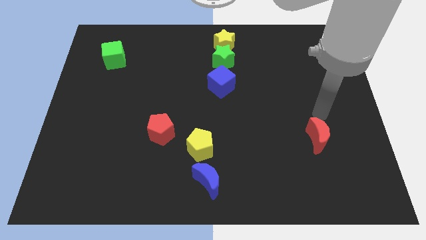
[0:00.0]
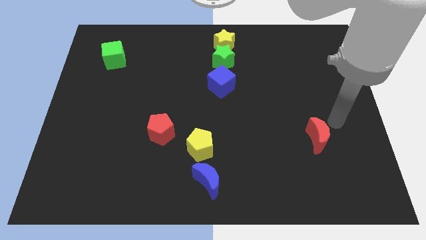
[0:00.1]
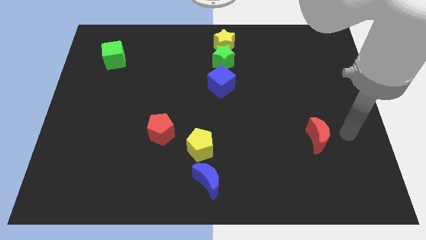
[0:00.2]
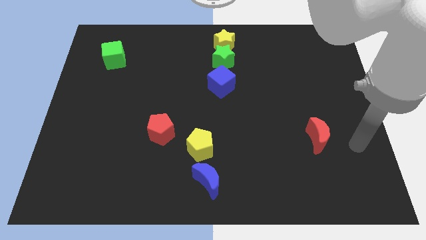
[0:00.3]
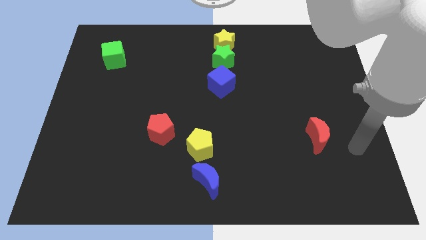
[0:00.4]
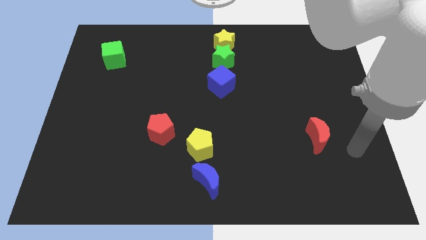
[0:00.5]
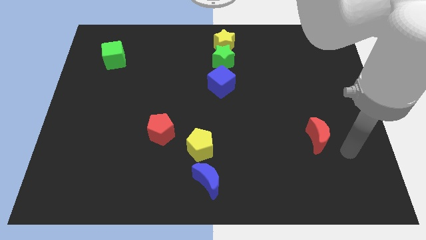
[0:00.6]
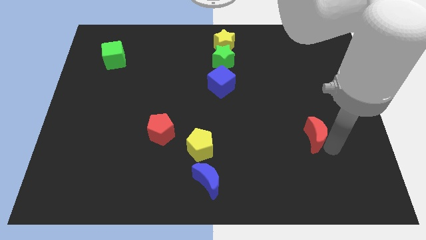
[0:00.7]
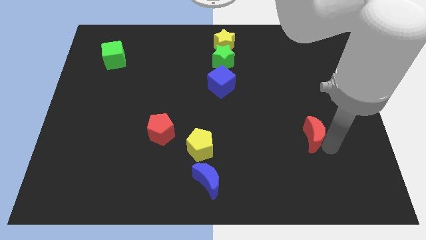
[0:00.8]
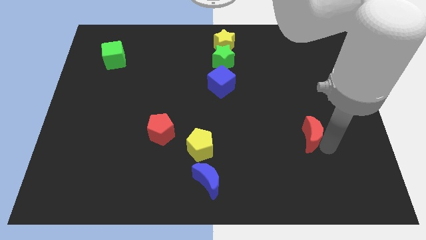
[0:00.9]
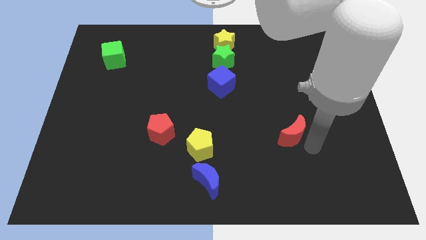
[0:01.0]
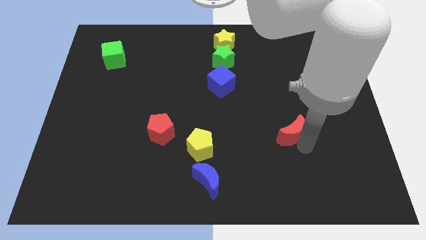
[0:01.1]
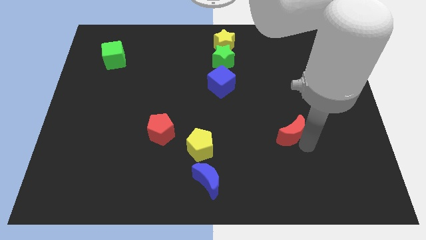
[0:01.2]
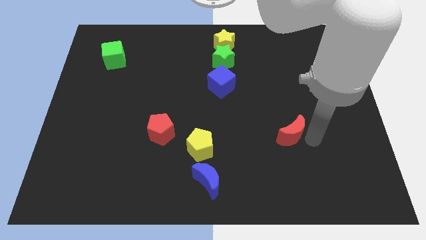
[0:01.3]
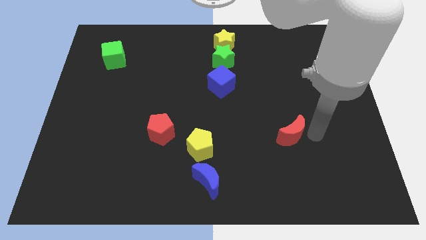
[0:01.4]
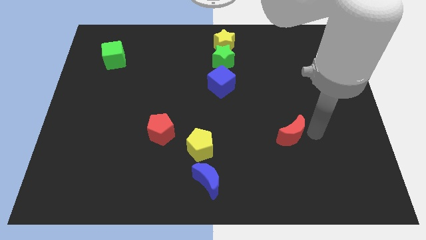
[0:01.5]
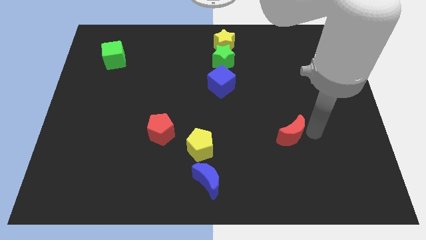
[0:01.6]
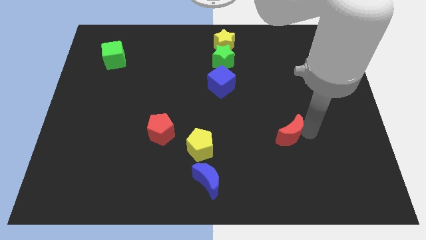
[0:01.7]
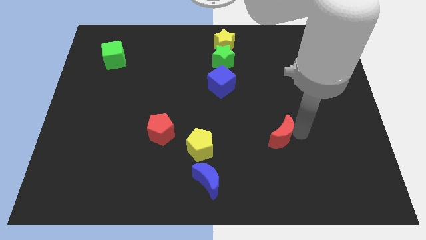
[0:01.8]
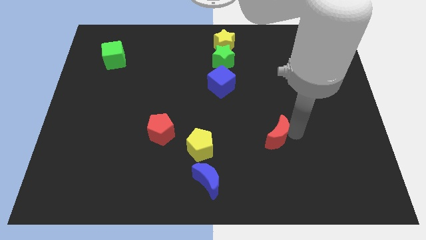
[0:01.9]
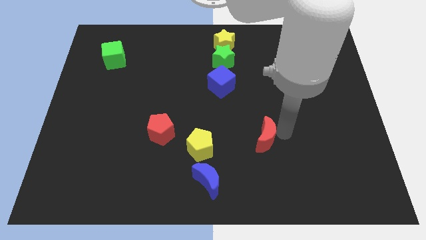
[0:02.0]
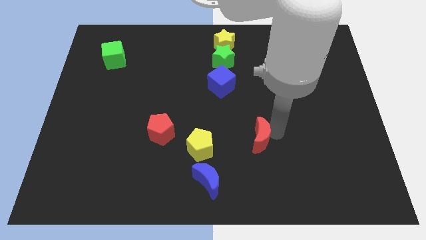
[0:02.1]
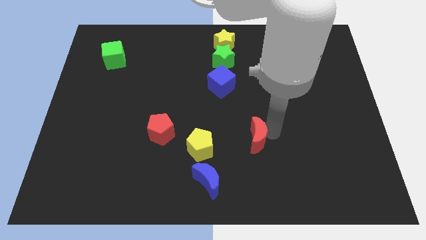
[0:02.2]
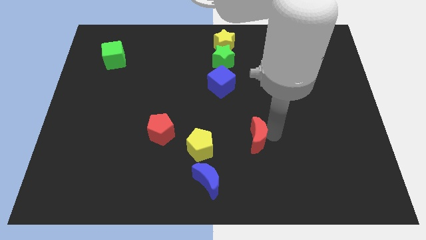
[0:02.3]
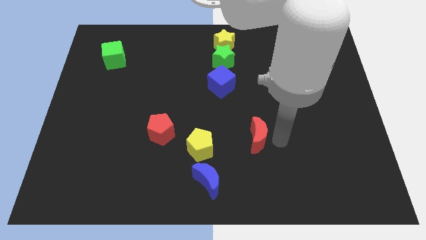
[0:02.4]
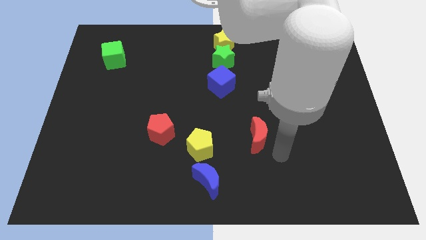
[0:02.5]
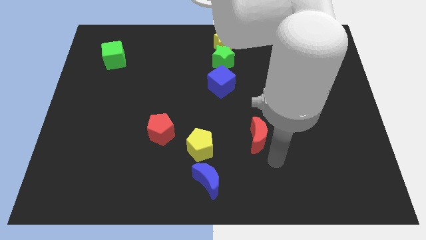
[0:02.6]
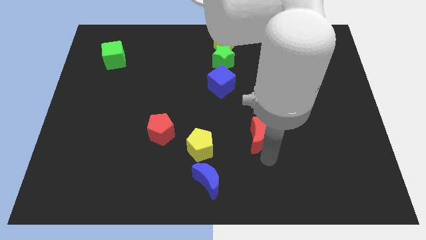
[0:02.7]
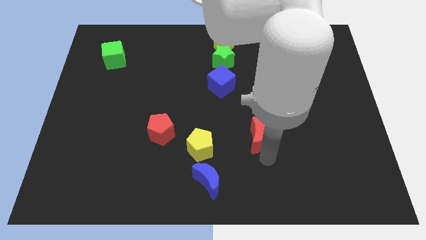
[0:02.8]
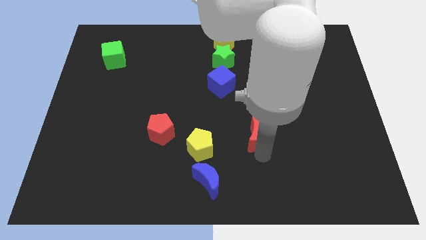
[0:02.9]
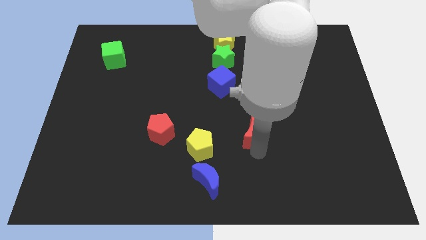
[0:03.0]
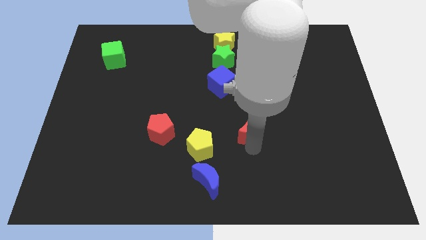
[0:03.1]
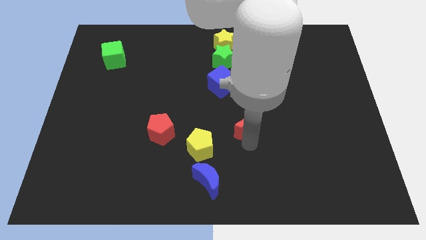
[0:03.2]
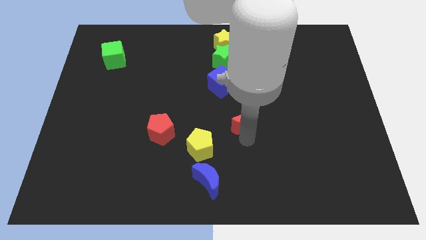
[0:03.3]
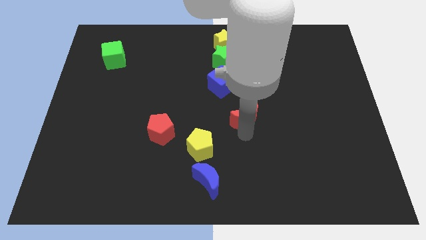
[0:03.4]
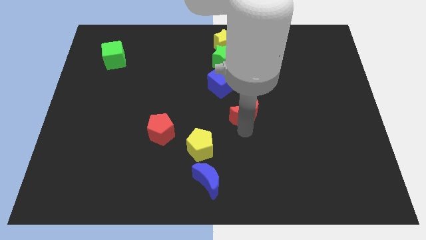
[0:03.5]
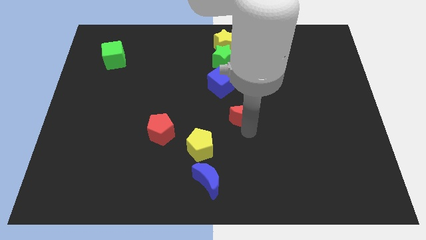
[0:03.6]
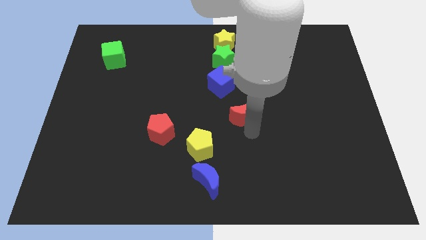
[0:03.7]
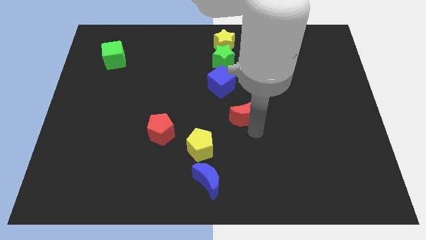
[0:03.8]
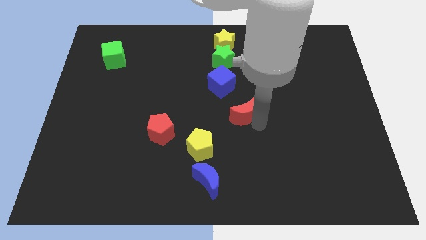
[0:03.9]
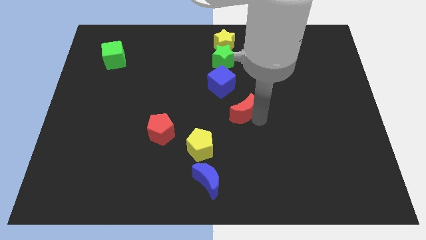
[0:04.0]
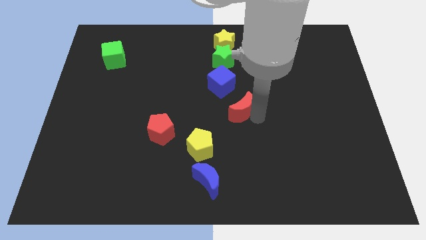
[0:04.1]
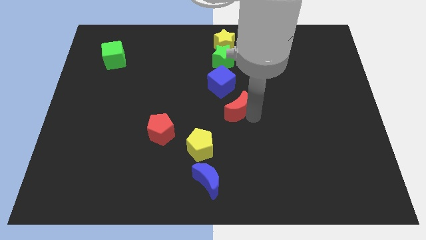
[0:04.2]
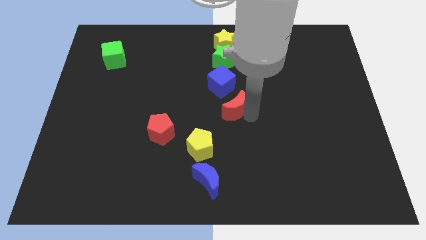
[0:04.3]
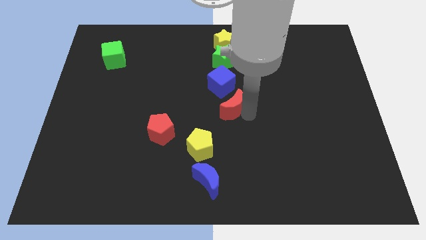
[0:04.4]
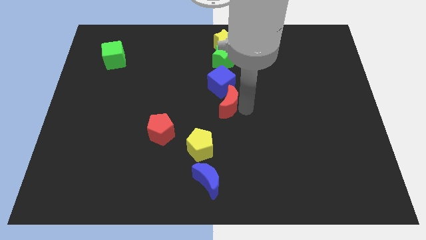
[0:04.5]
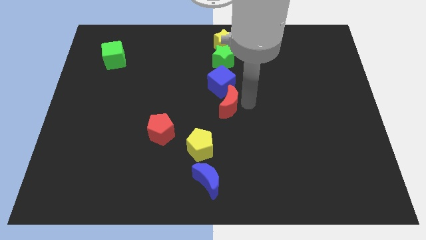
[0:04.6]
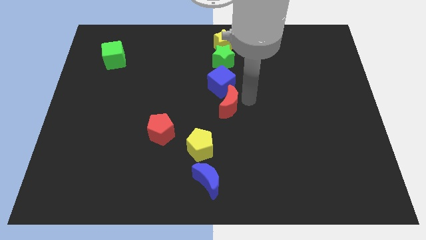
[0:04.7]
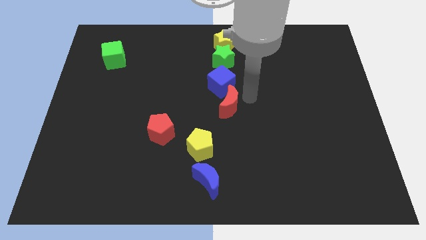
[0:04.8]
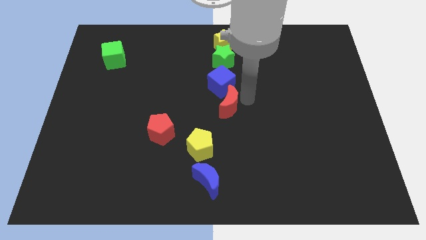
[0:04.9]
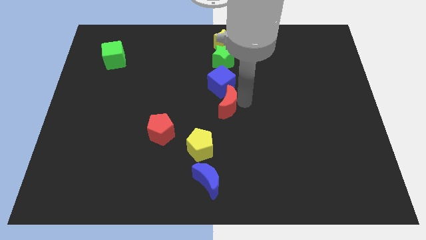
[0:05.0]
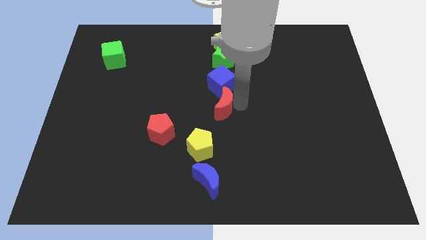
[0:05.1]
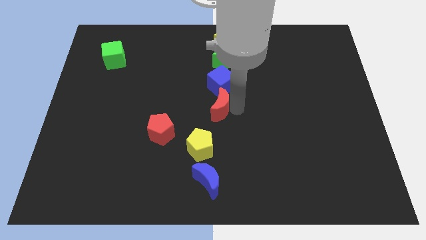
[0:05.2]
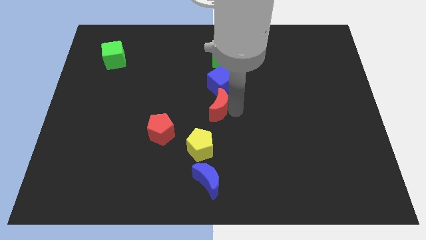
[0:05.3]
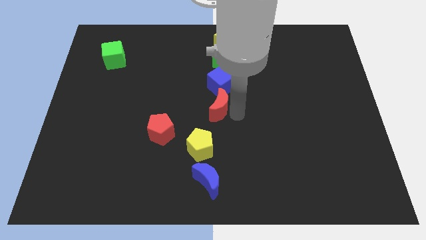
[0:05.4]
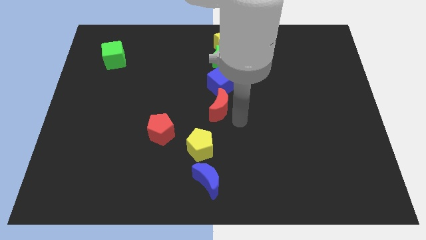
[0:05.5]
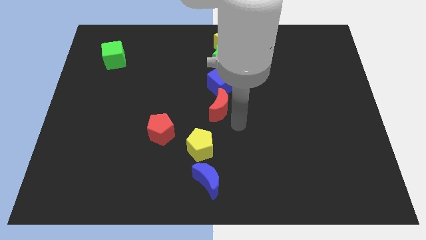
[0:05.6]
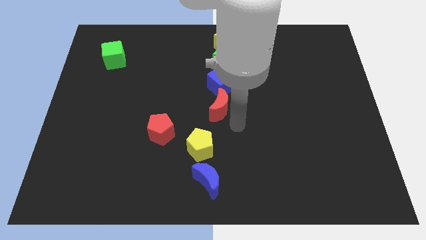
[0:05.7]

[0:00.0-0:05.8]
push the red moon to the bottom side of the blue cube

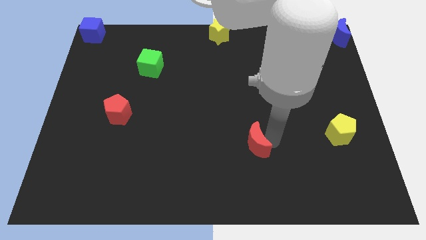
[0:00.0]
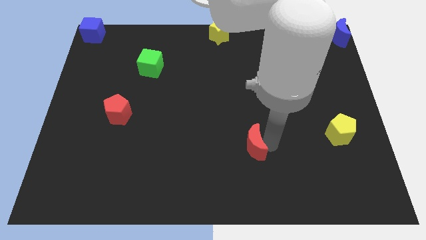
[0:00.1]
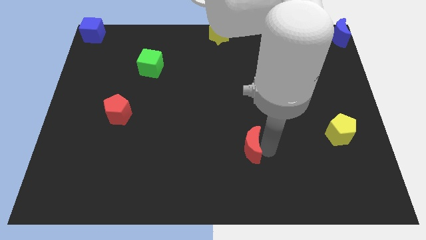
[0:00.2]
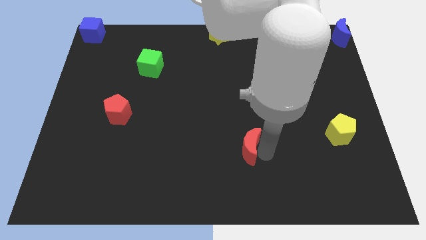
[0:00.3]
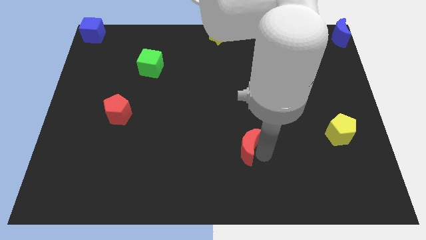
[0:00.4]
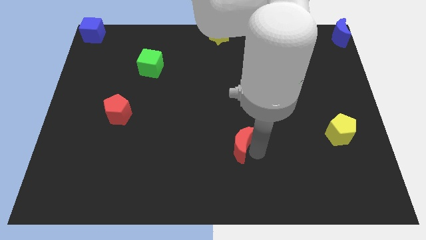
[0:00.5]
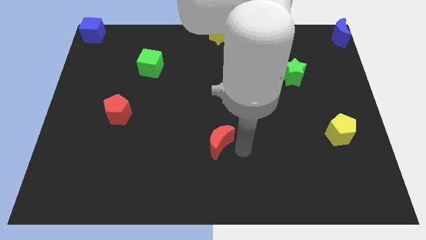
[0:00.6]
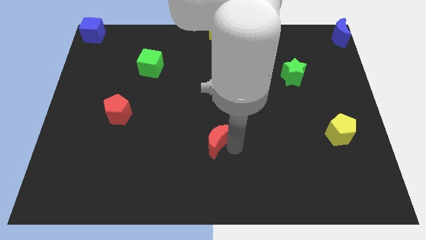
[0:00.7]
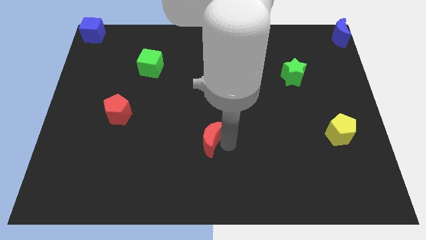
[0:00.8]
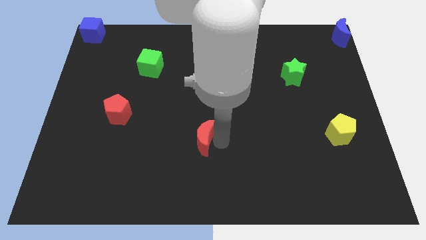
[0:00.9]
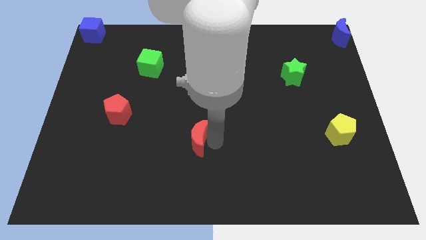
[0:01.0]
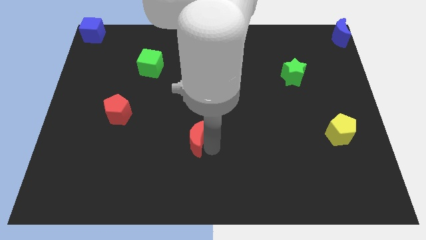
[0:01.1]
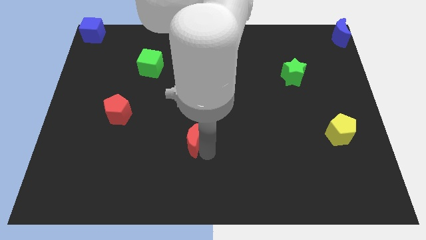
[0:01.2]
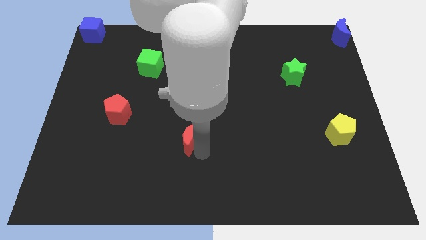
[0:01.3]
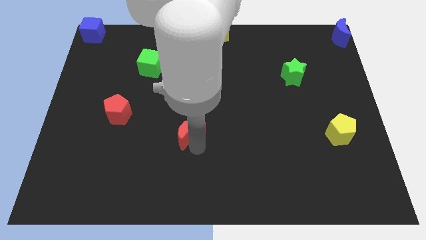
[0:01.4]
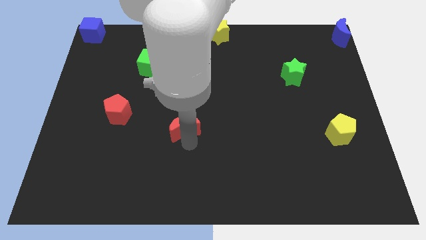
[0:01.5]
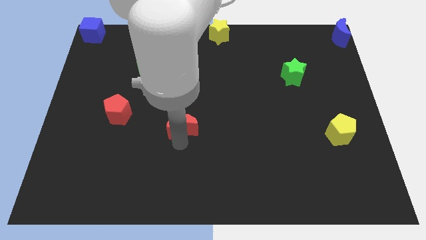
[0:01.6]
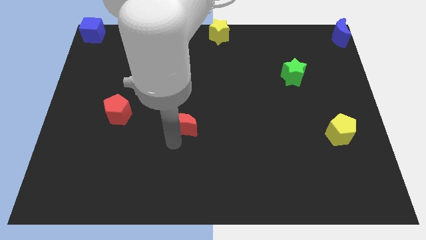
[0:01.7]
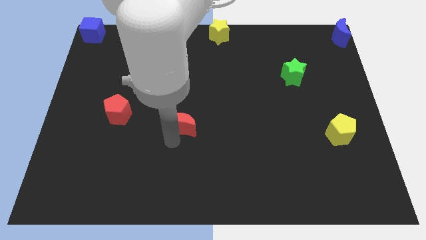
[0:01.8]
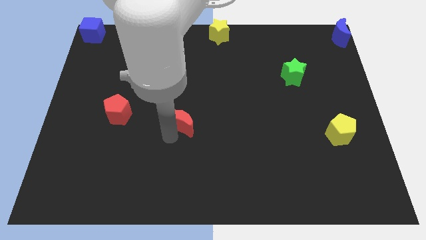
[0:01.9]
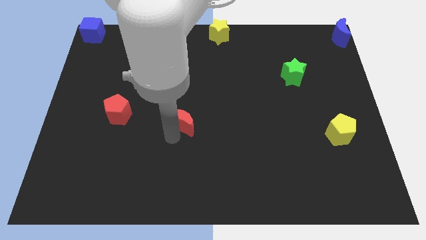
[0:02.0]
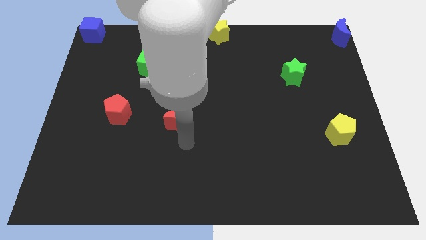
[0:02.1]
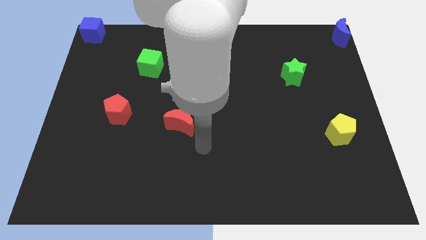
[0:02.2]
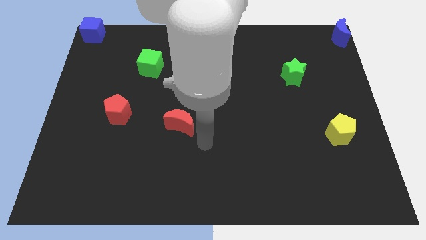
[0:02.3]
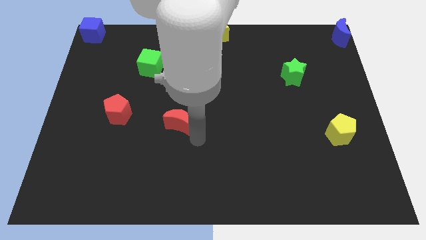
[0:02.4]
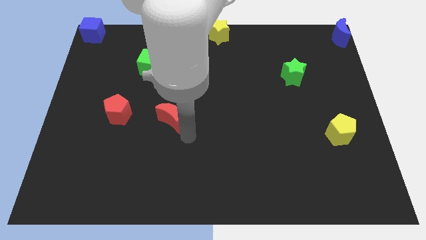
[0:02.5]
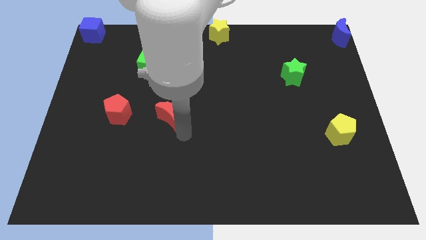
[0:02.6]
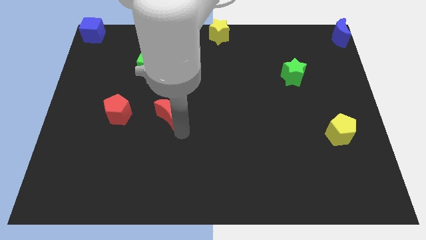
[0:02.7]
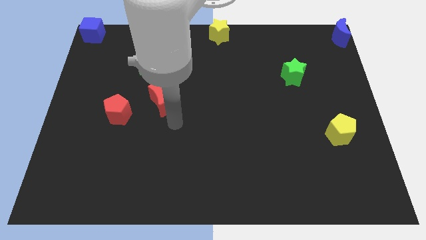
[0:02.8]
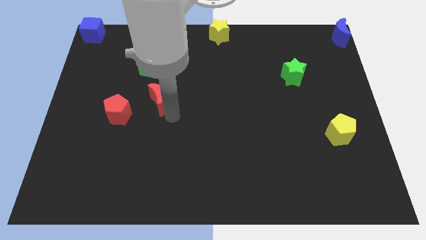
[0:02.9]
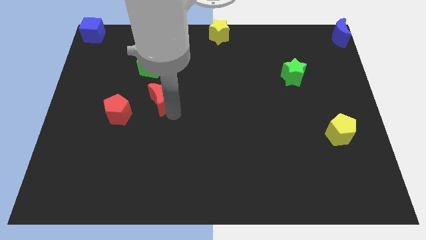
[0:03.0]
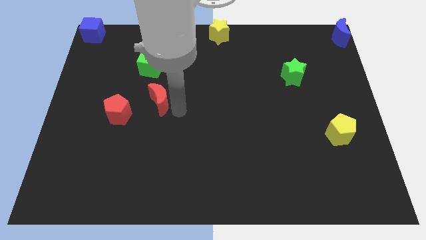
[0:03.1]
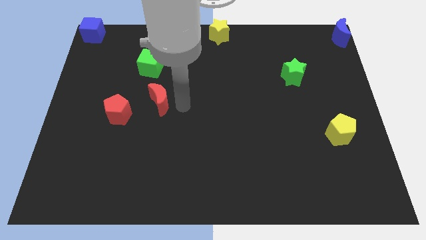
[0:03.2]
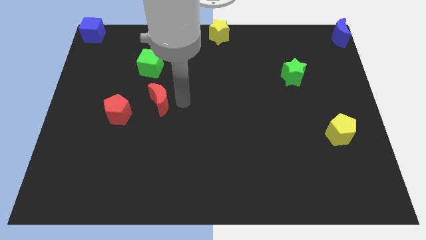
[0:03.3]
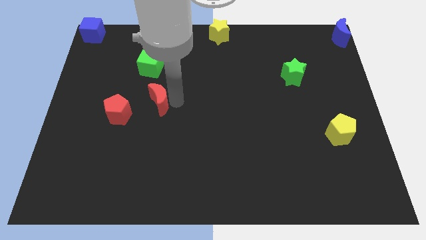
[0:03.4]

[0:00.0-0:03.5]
place the red moon below the green cube
